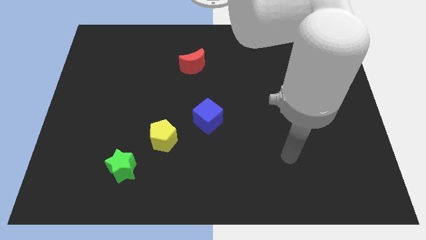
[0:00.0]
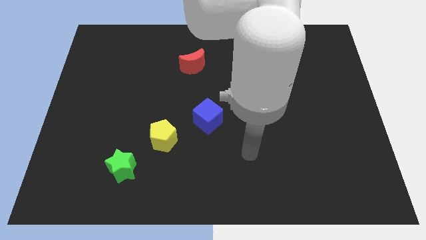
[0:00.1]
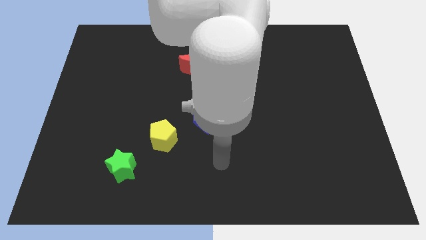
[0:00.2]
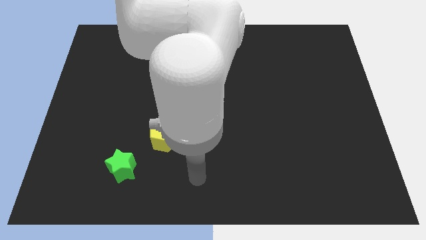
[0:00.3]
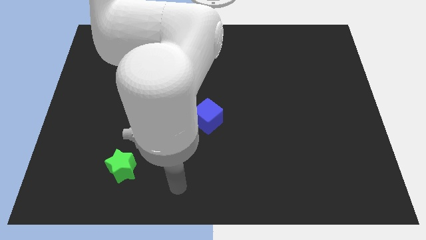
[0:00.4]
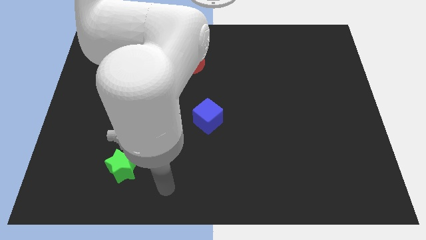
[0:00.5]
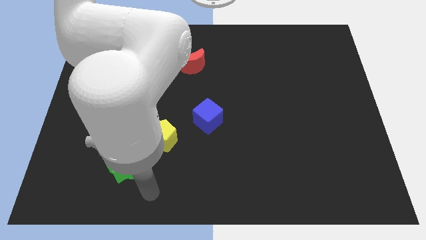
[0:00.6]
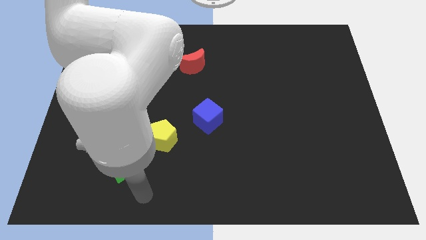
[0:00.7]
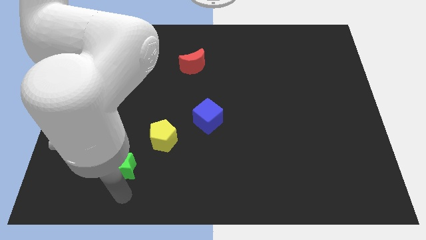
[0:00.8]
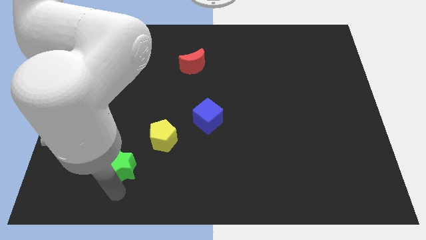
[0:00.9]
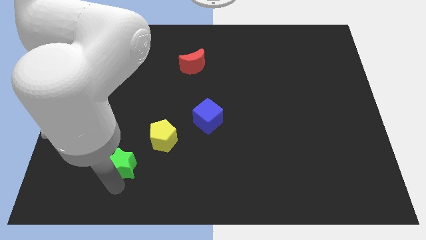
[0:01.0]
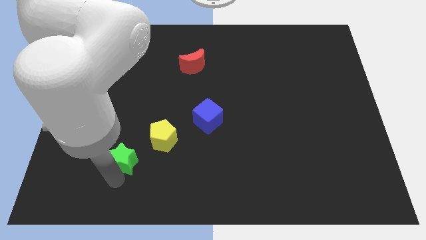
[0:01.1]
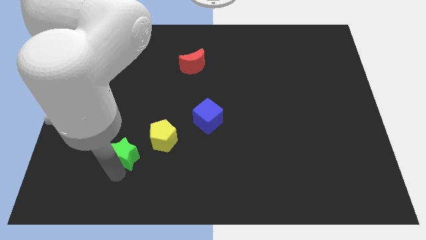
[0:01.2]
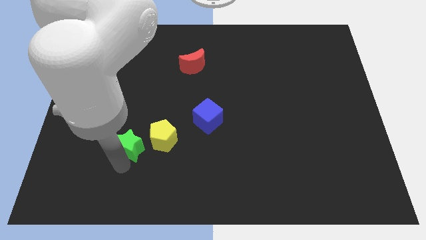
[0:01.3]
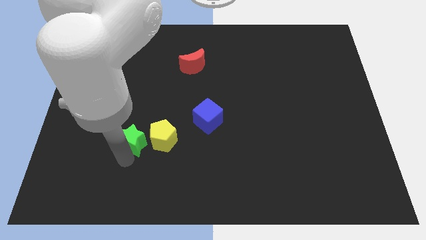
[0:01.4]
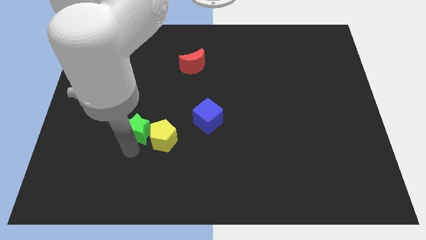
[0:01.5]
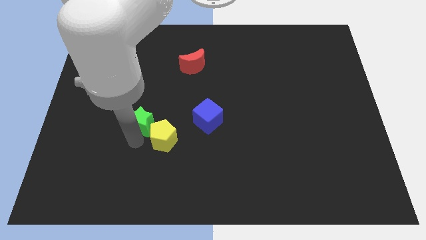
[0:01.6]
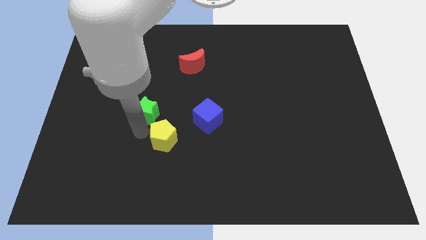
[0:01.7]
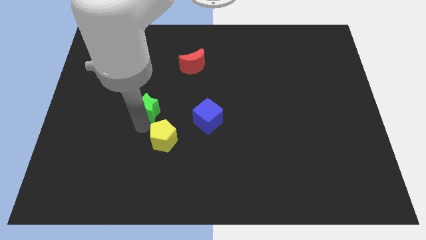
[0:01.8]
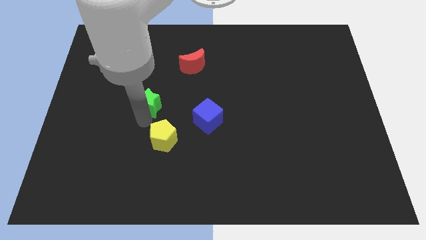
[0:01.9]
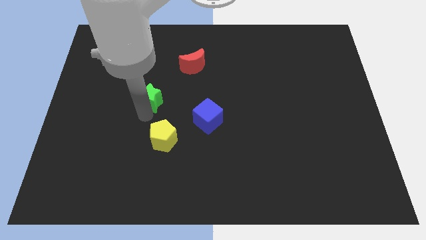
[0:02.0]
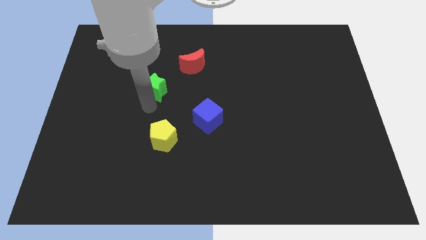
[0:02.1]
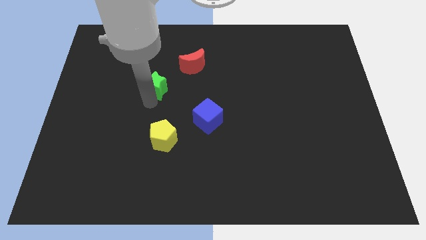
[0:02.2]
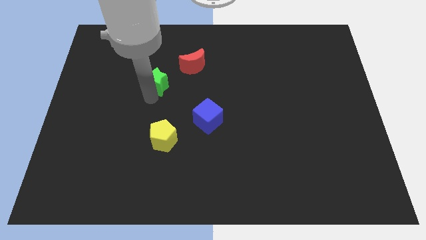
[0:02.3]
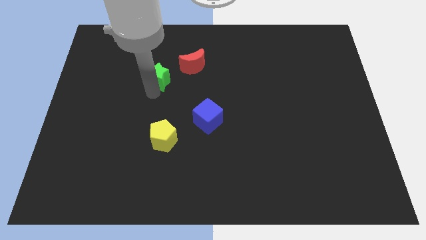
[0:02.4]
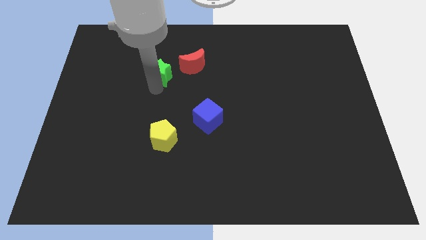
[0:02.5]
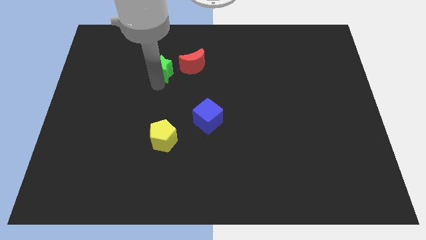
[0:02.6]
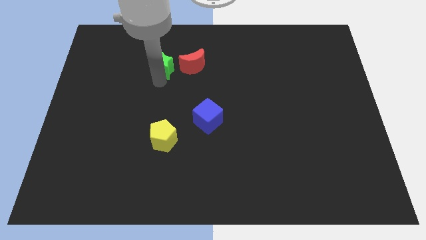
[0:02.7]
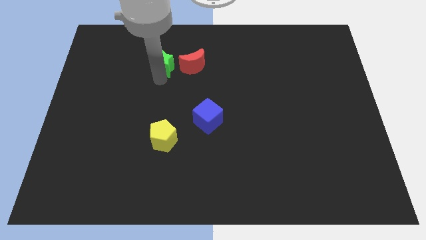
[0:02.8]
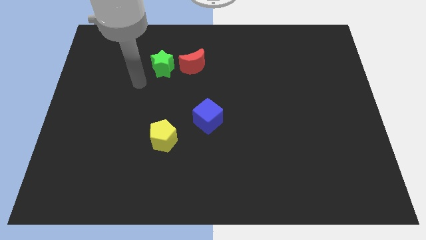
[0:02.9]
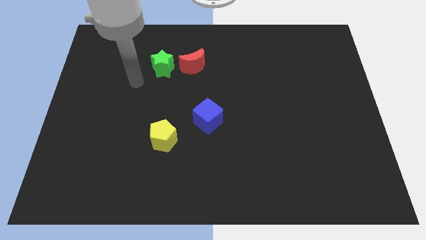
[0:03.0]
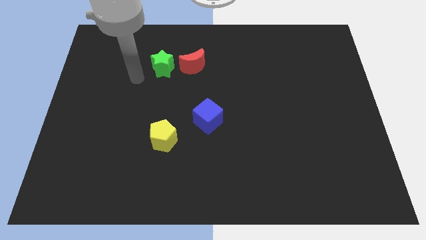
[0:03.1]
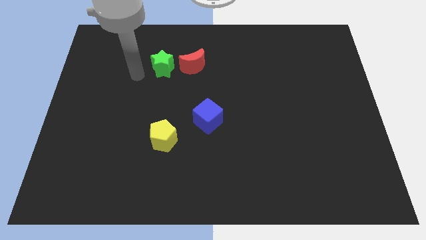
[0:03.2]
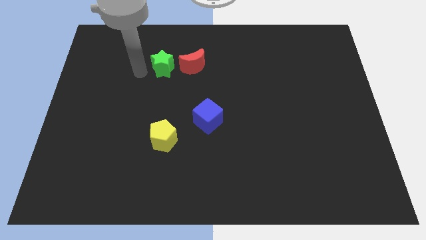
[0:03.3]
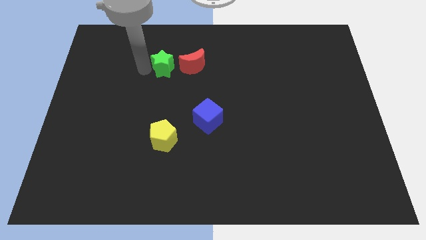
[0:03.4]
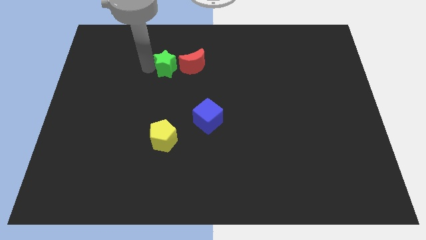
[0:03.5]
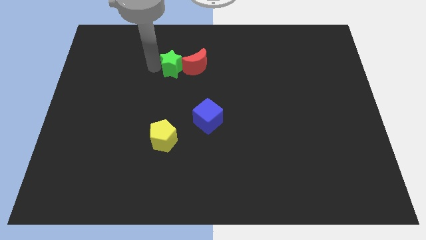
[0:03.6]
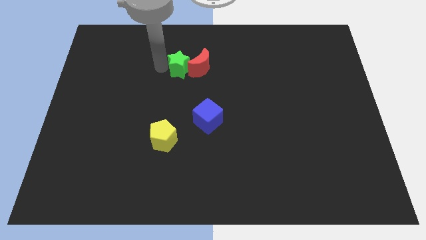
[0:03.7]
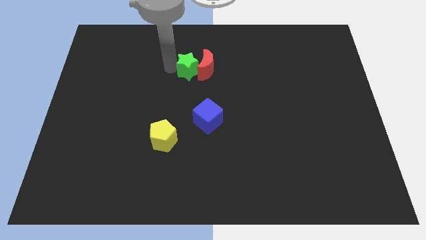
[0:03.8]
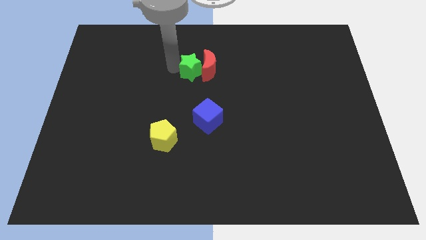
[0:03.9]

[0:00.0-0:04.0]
slide the green block towards the red block

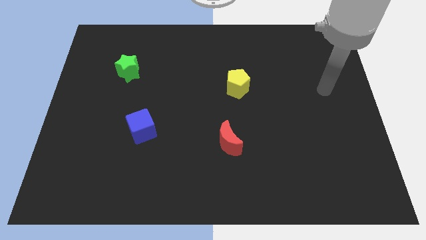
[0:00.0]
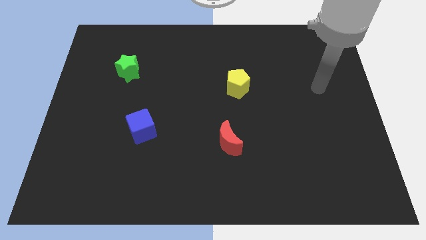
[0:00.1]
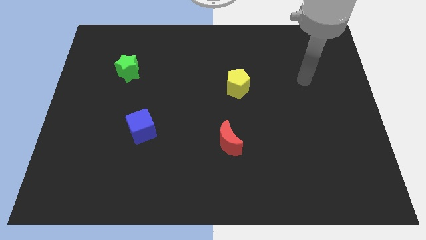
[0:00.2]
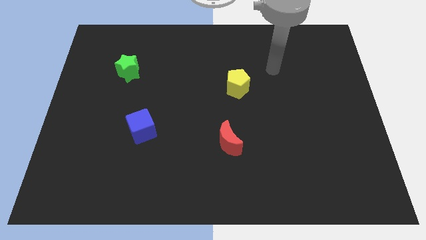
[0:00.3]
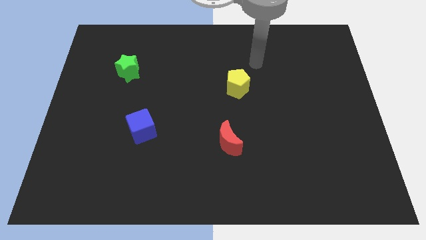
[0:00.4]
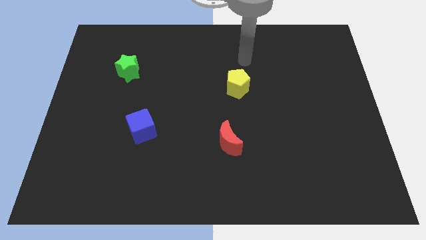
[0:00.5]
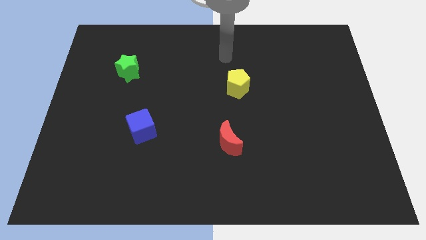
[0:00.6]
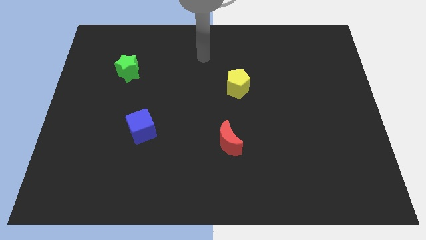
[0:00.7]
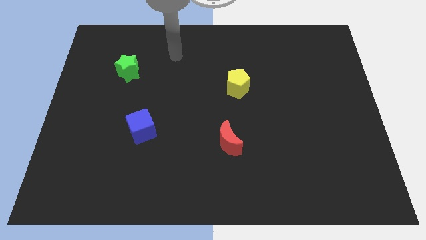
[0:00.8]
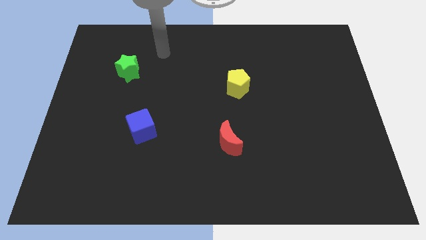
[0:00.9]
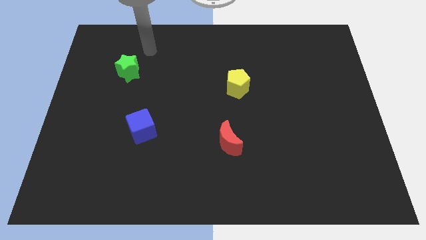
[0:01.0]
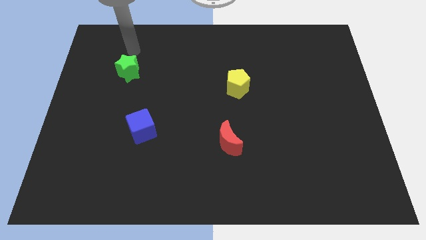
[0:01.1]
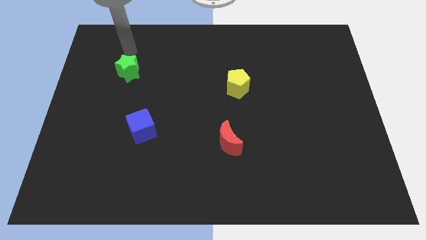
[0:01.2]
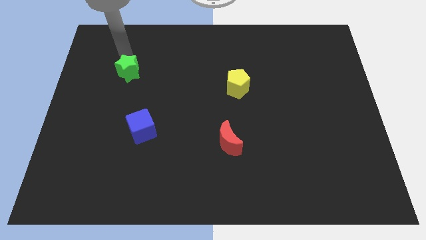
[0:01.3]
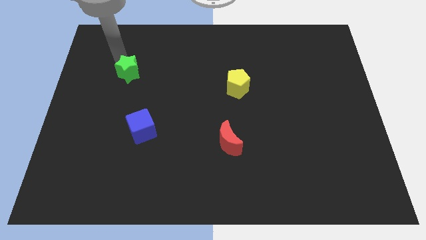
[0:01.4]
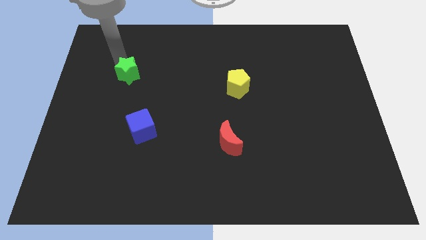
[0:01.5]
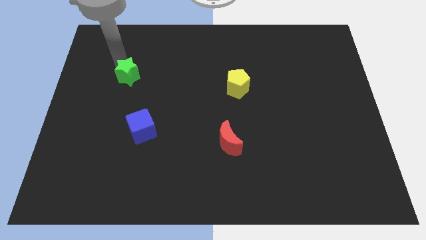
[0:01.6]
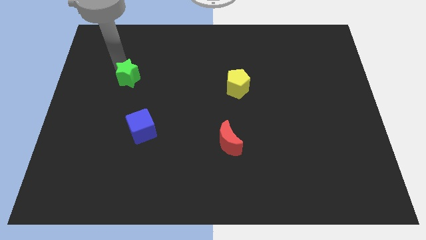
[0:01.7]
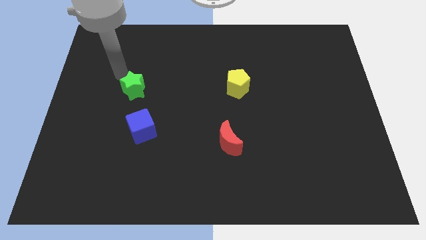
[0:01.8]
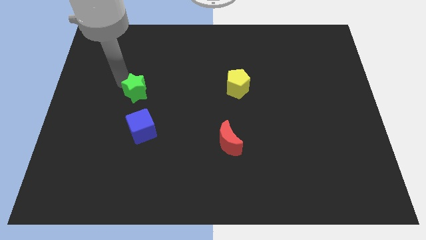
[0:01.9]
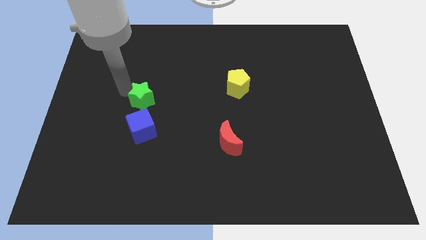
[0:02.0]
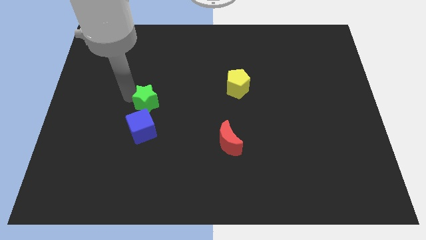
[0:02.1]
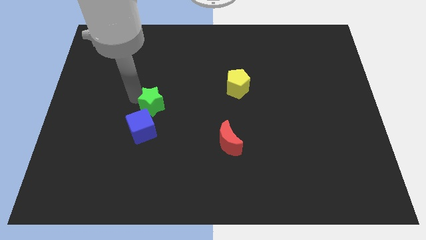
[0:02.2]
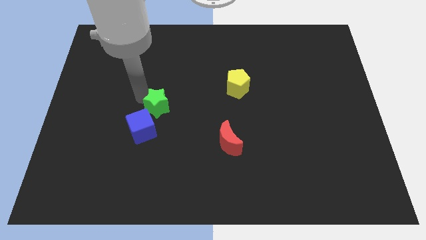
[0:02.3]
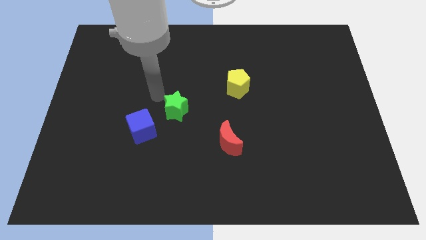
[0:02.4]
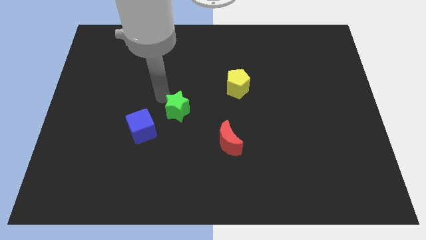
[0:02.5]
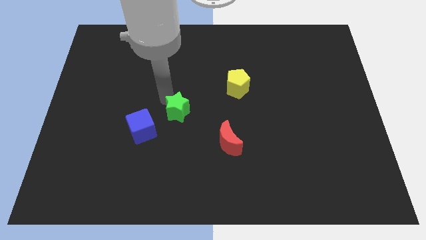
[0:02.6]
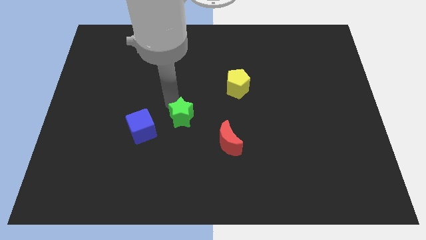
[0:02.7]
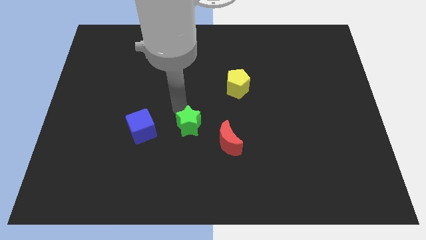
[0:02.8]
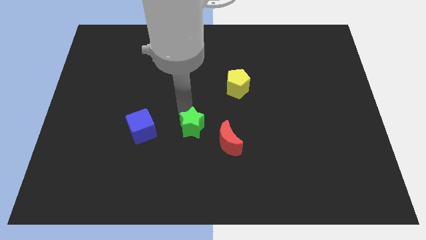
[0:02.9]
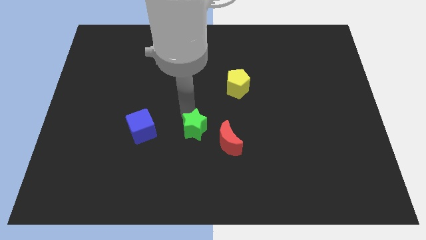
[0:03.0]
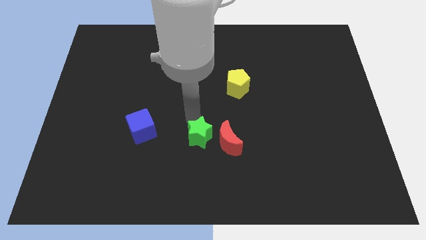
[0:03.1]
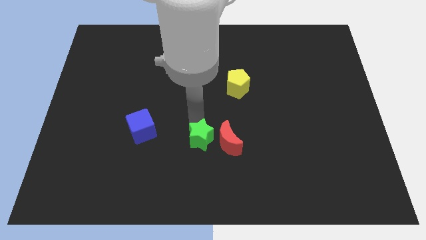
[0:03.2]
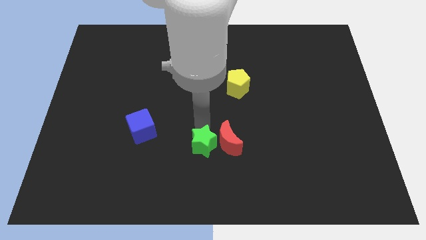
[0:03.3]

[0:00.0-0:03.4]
move the green block next to the moon

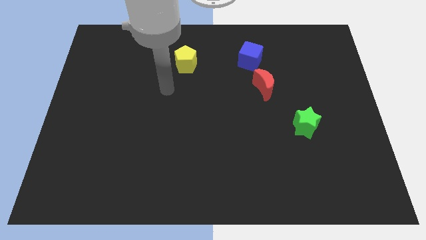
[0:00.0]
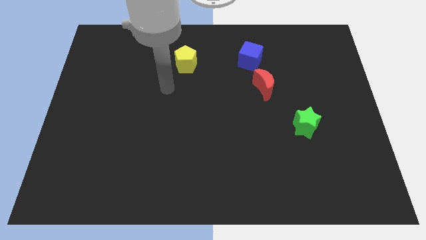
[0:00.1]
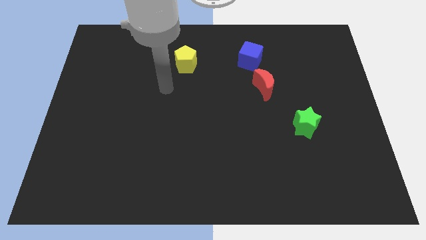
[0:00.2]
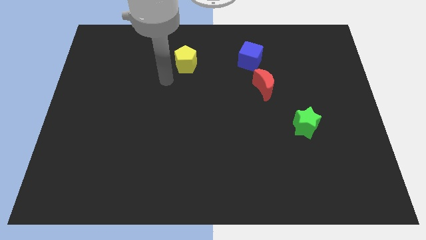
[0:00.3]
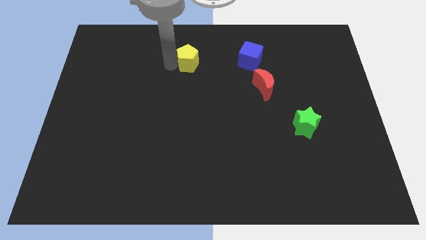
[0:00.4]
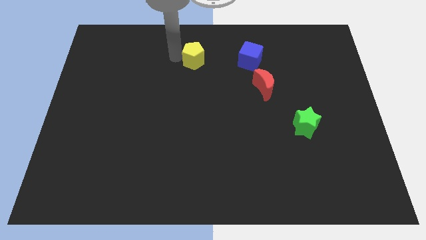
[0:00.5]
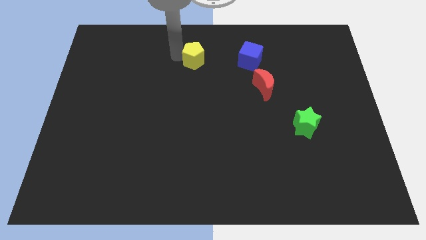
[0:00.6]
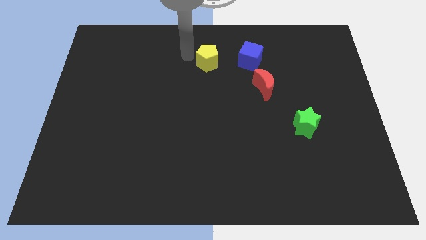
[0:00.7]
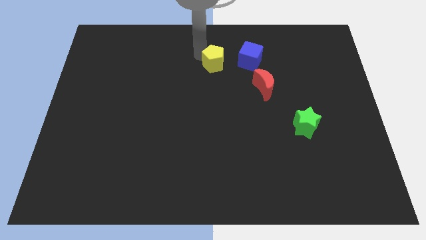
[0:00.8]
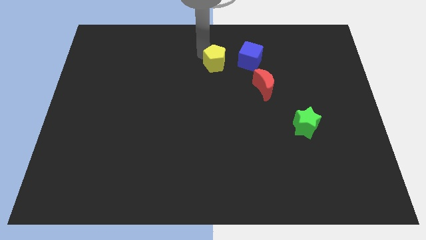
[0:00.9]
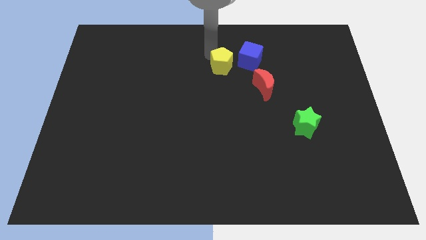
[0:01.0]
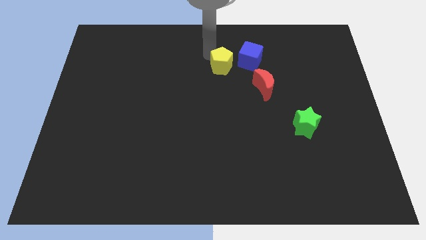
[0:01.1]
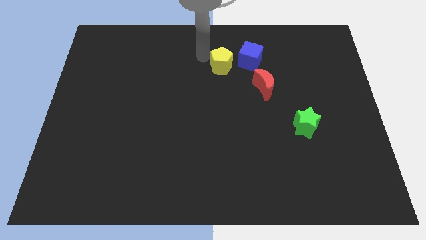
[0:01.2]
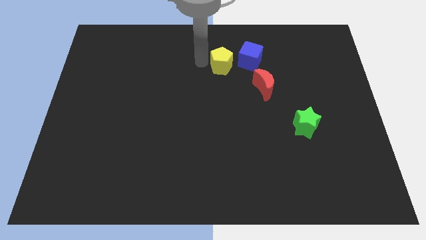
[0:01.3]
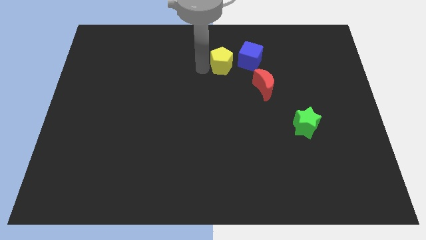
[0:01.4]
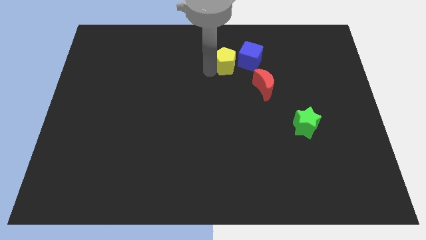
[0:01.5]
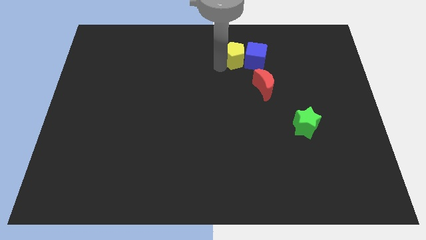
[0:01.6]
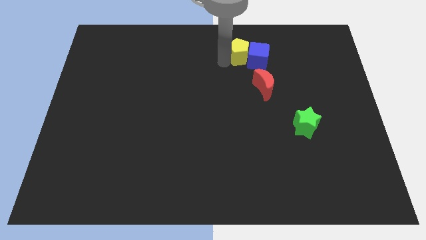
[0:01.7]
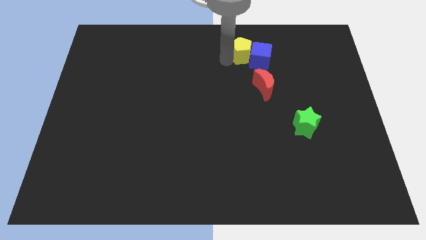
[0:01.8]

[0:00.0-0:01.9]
push the pentagon to the blue cube
